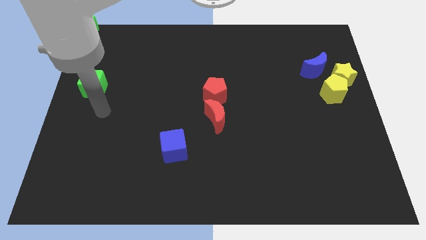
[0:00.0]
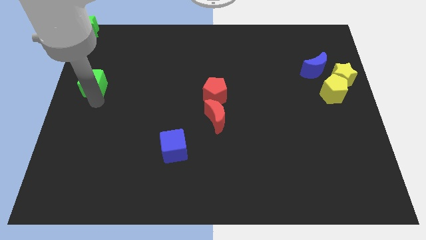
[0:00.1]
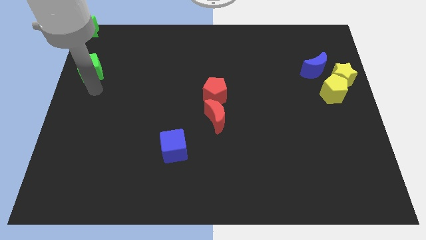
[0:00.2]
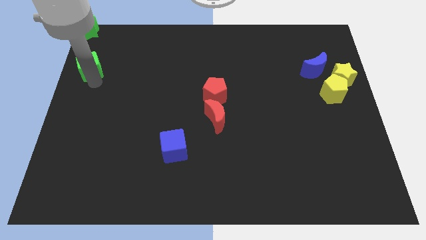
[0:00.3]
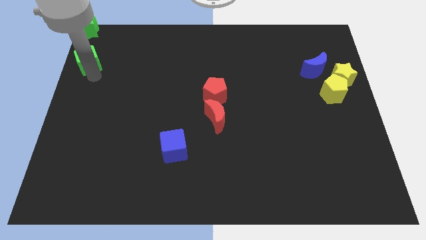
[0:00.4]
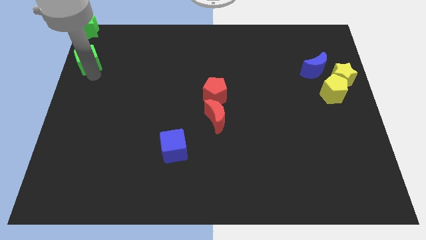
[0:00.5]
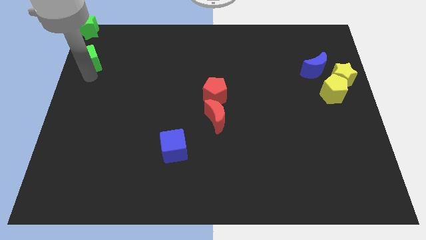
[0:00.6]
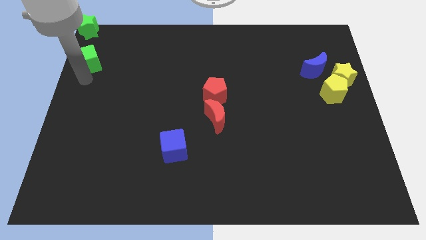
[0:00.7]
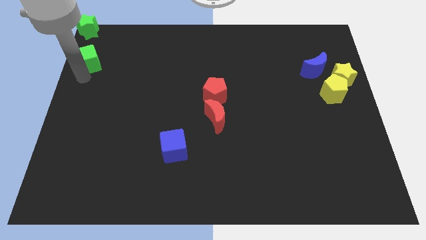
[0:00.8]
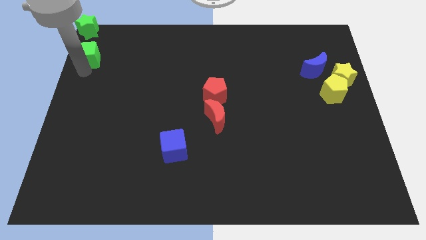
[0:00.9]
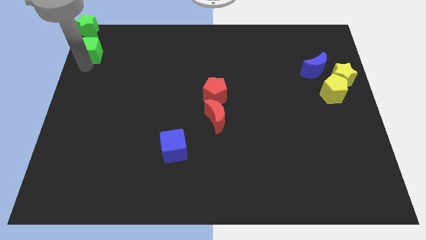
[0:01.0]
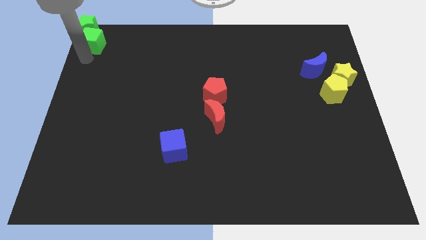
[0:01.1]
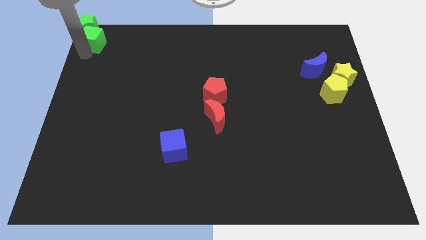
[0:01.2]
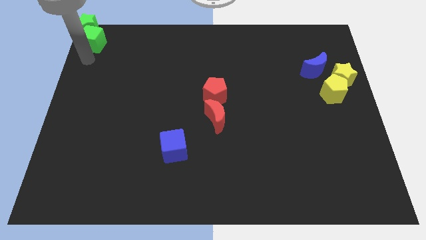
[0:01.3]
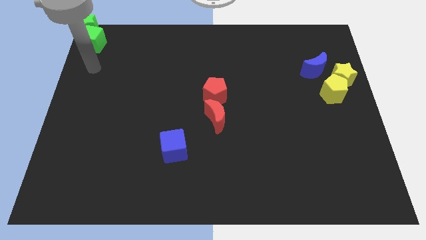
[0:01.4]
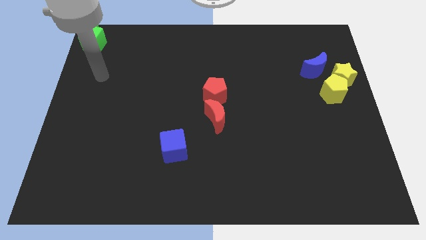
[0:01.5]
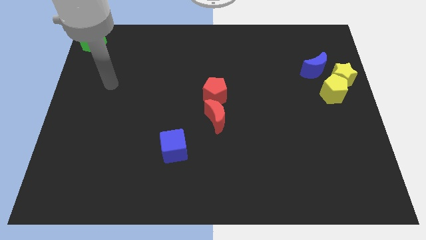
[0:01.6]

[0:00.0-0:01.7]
move the green cube to the bottom of the green star

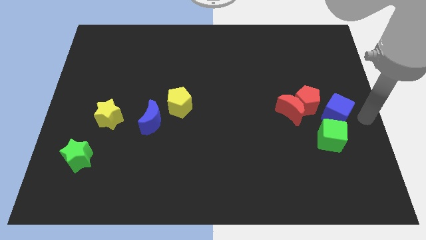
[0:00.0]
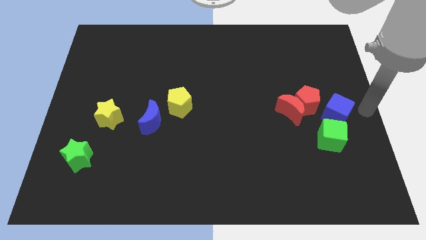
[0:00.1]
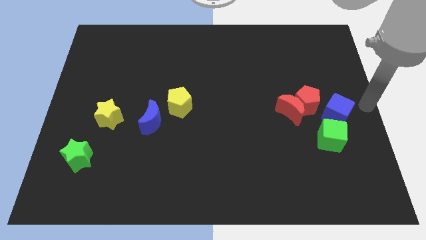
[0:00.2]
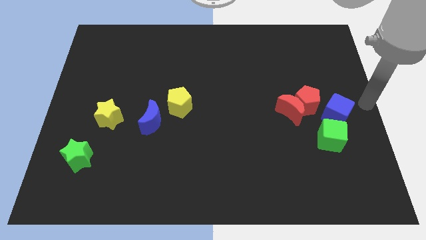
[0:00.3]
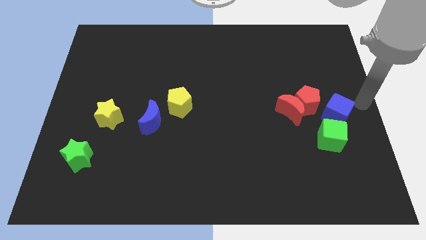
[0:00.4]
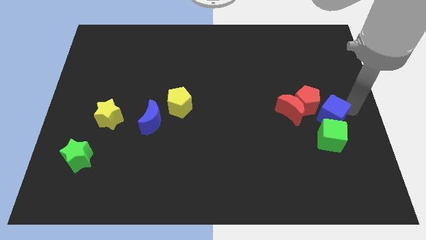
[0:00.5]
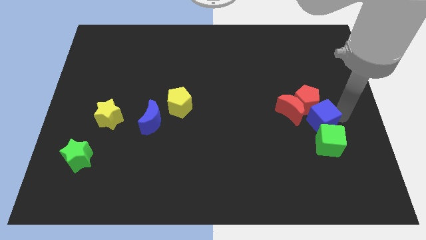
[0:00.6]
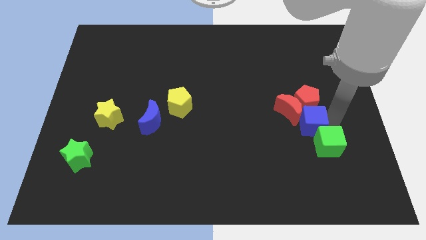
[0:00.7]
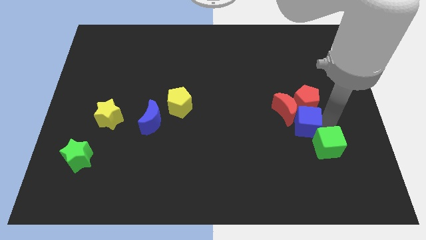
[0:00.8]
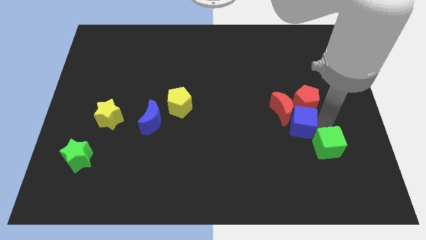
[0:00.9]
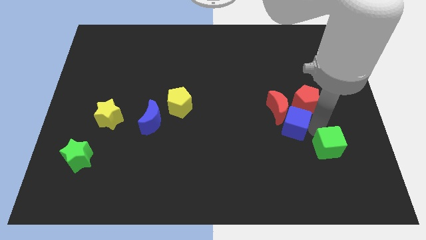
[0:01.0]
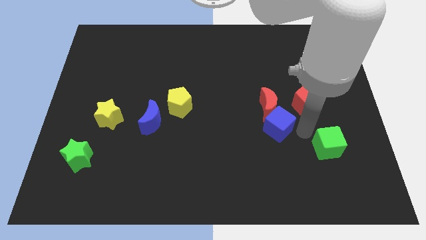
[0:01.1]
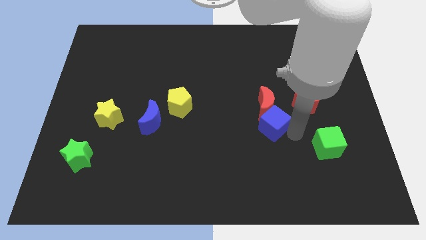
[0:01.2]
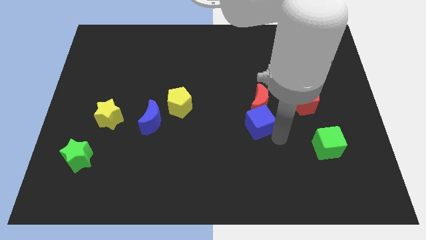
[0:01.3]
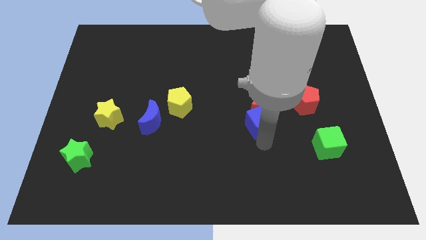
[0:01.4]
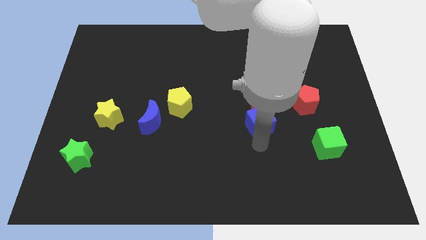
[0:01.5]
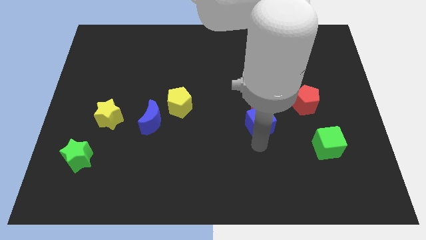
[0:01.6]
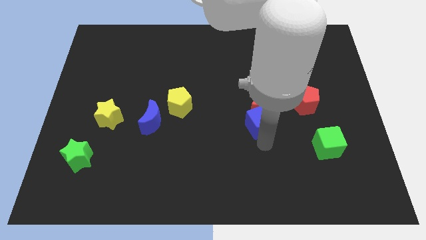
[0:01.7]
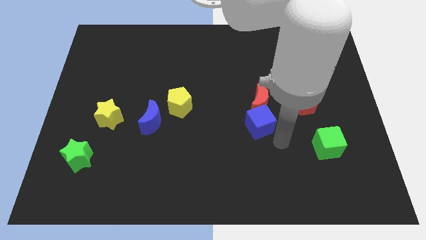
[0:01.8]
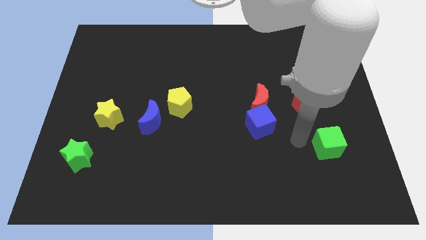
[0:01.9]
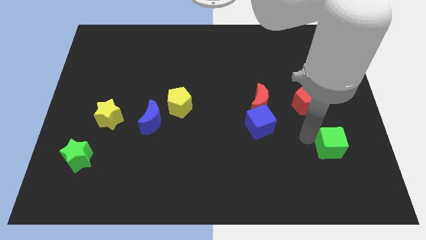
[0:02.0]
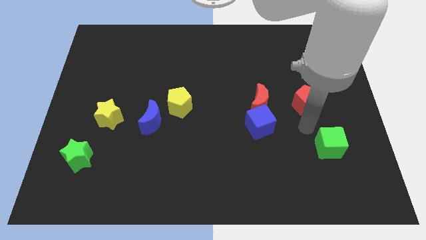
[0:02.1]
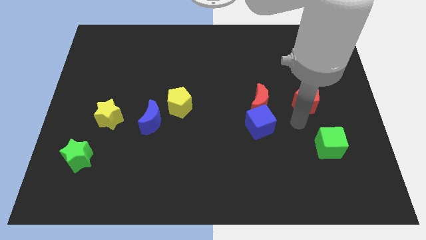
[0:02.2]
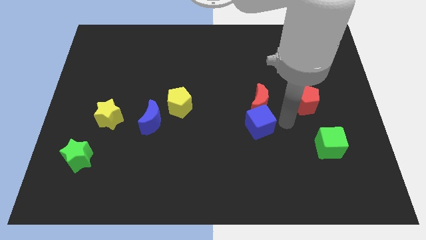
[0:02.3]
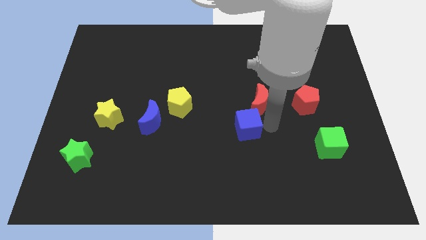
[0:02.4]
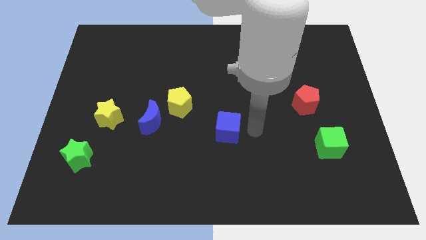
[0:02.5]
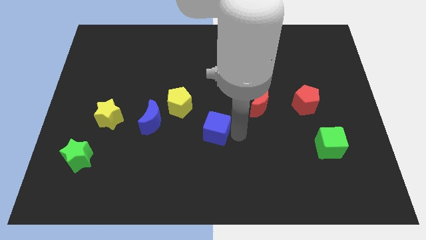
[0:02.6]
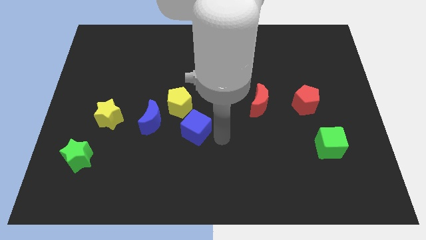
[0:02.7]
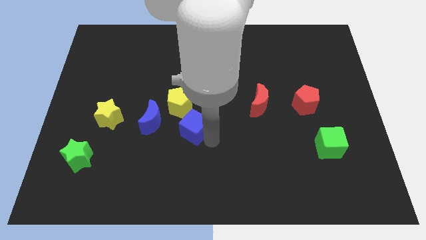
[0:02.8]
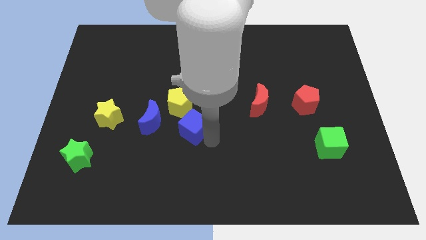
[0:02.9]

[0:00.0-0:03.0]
separate the red moon form the red pentagon

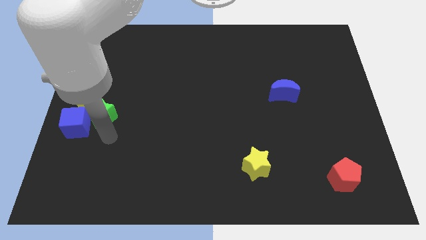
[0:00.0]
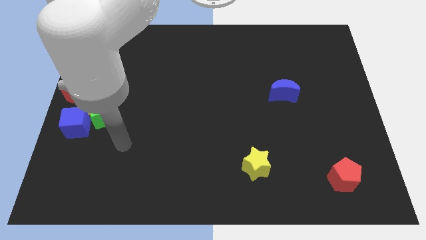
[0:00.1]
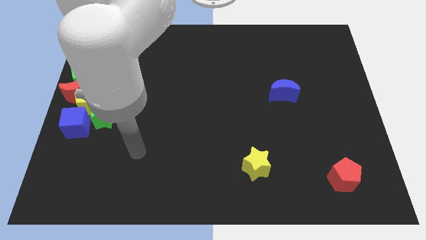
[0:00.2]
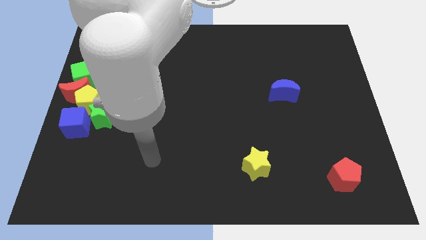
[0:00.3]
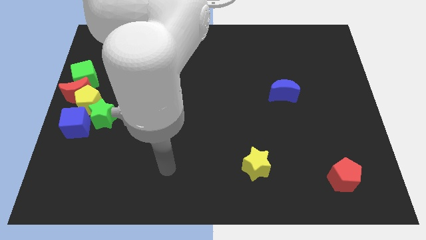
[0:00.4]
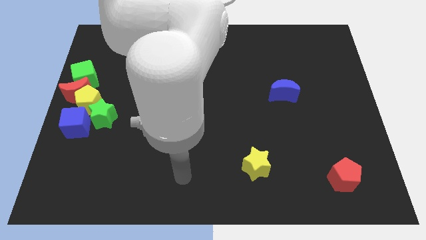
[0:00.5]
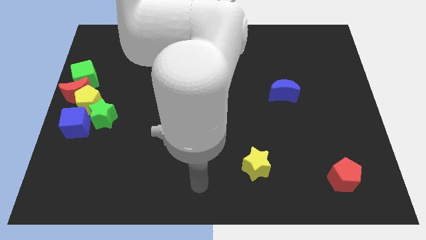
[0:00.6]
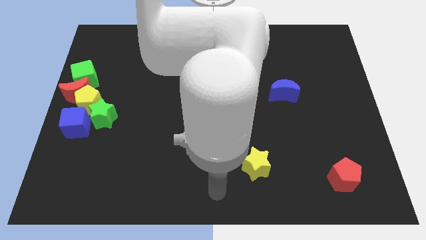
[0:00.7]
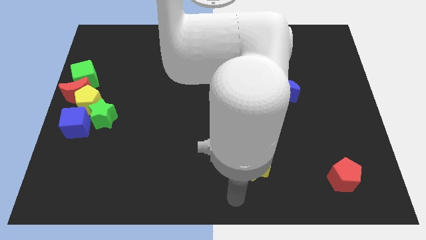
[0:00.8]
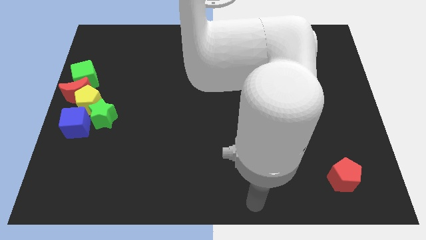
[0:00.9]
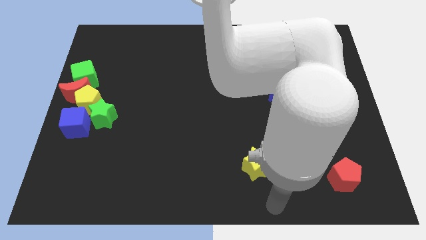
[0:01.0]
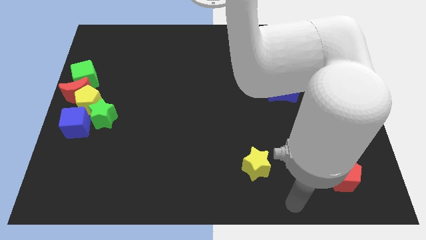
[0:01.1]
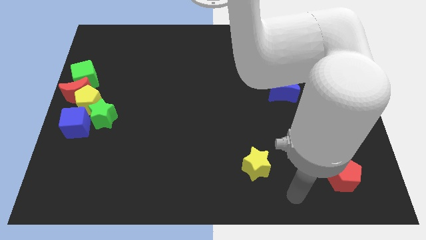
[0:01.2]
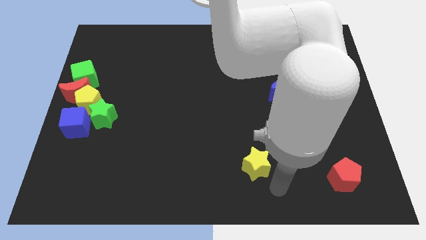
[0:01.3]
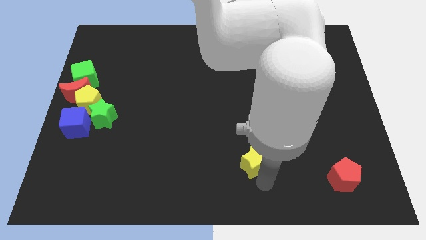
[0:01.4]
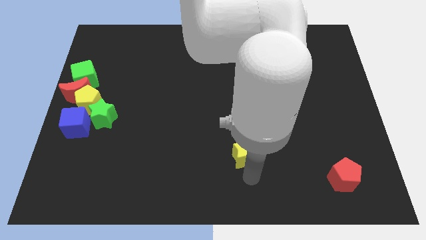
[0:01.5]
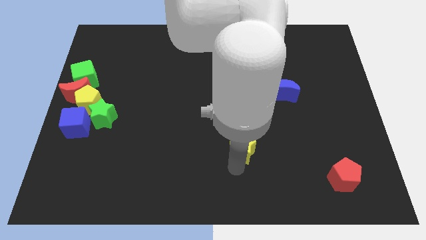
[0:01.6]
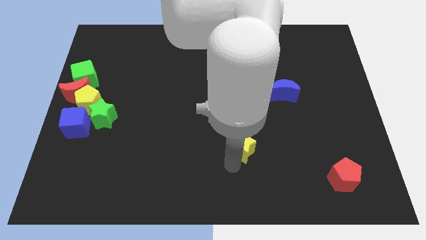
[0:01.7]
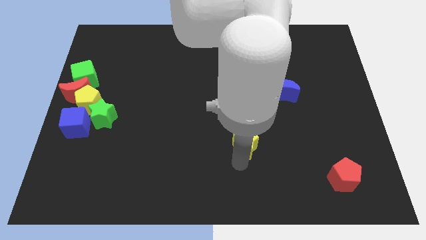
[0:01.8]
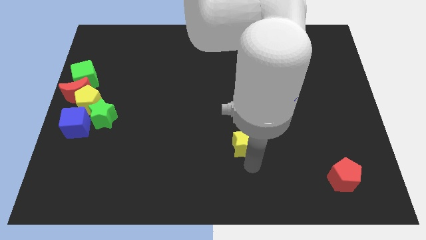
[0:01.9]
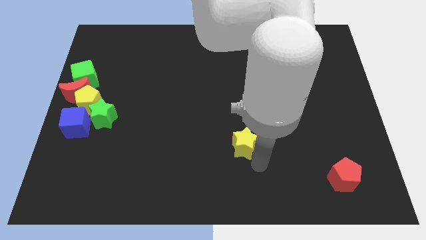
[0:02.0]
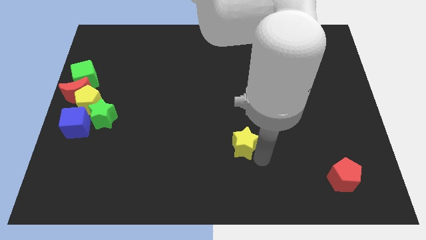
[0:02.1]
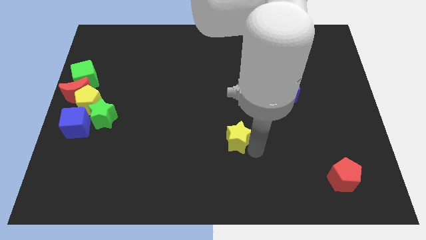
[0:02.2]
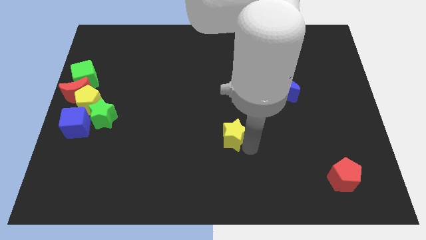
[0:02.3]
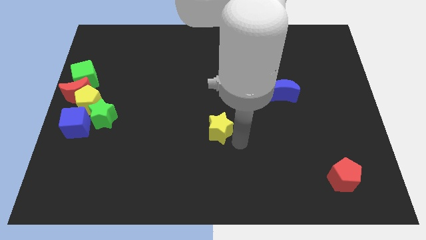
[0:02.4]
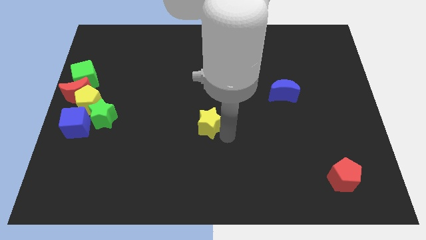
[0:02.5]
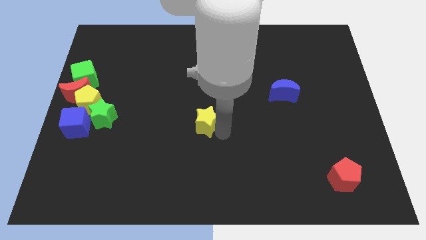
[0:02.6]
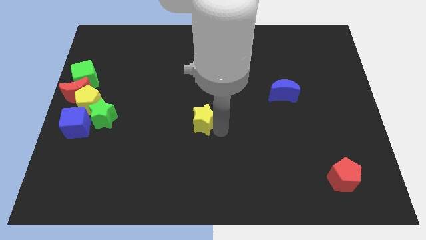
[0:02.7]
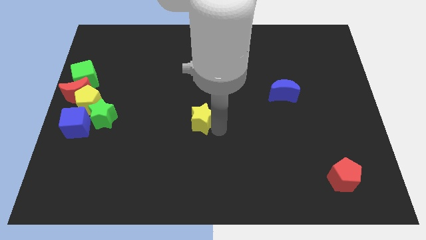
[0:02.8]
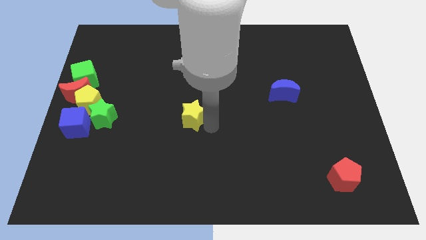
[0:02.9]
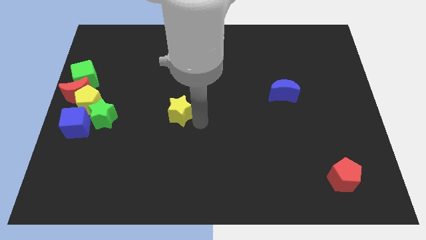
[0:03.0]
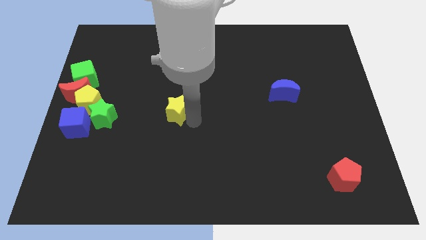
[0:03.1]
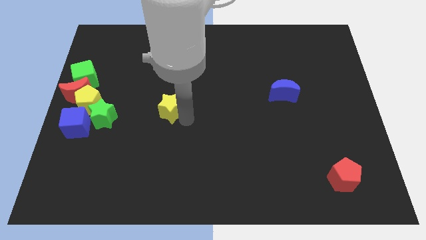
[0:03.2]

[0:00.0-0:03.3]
place yellow star to the right of green star

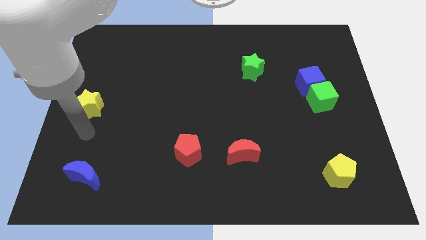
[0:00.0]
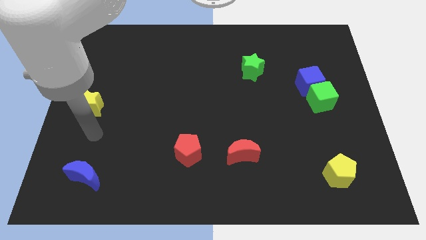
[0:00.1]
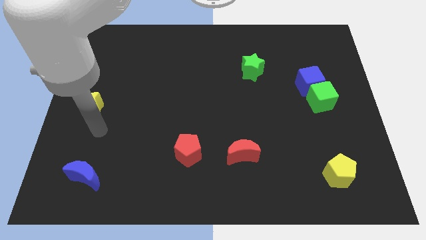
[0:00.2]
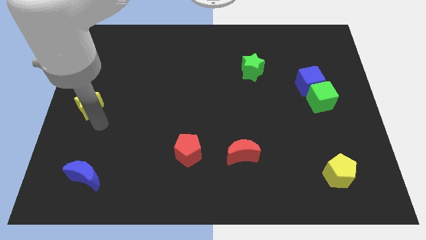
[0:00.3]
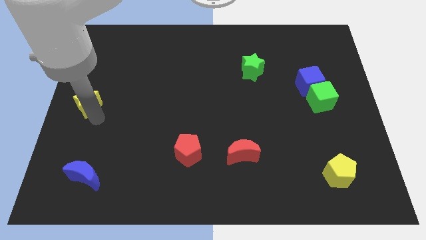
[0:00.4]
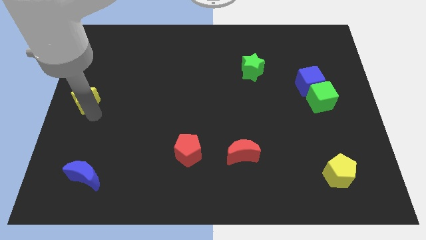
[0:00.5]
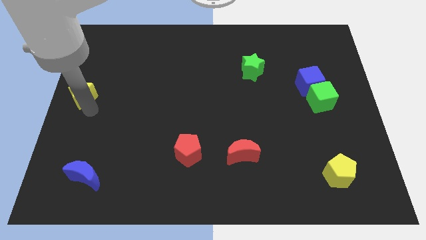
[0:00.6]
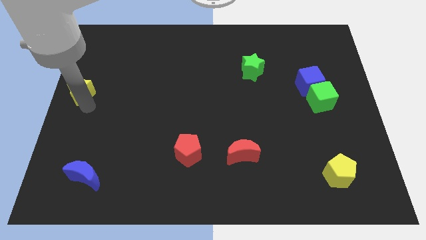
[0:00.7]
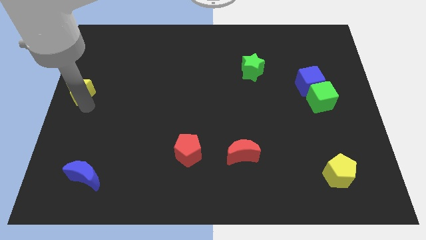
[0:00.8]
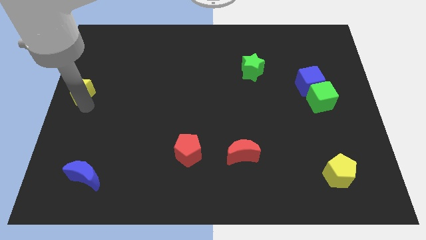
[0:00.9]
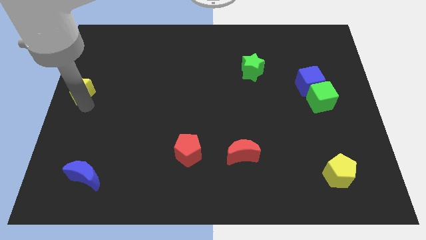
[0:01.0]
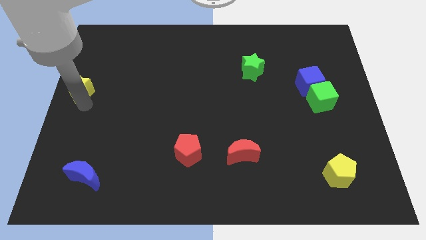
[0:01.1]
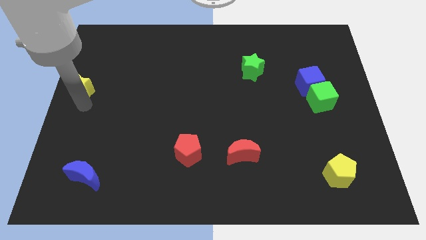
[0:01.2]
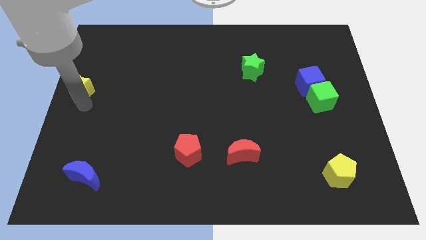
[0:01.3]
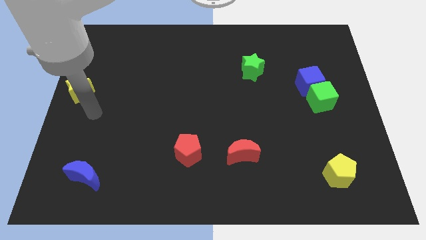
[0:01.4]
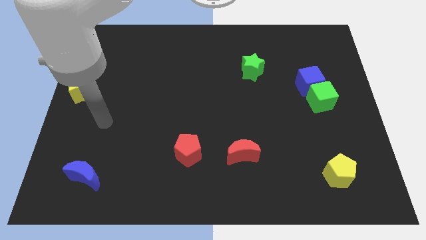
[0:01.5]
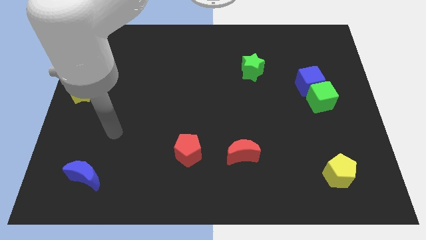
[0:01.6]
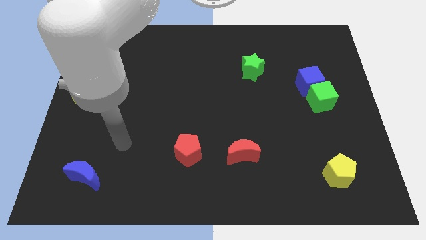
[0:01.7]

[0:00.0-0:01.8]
move the yellow star to the center left of the board
